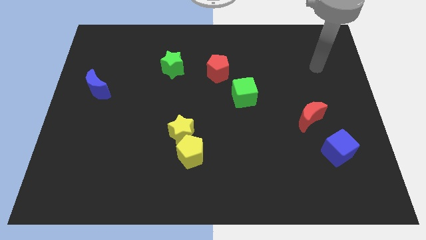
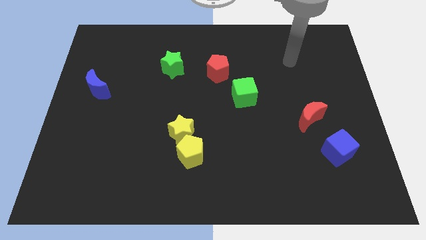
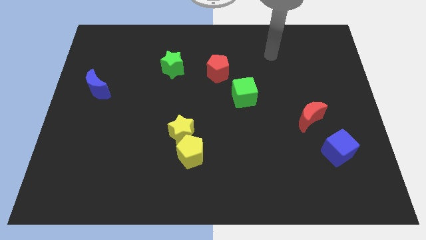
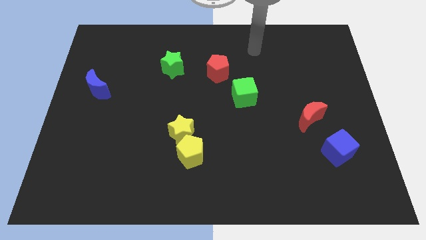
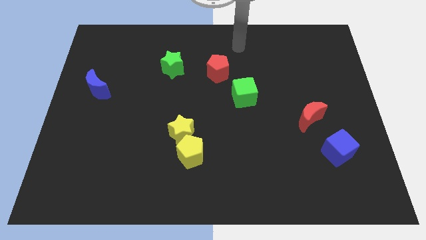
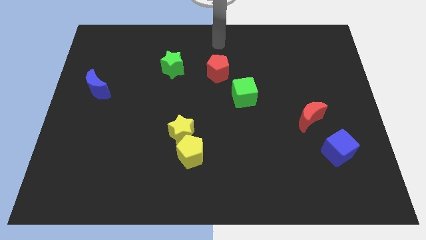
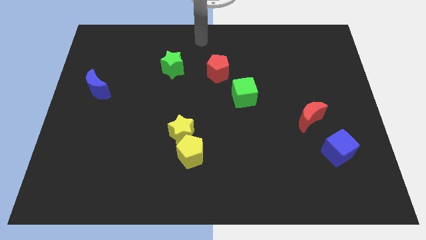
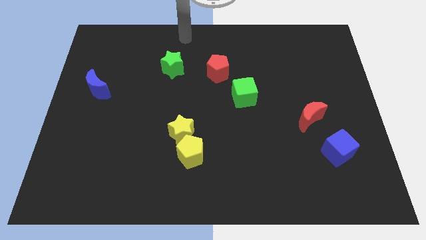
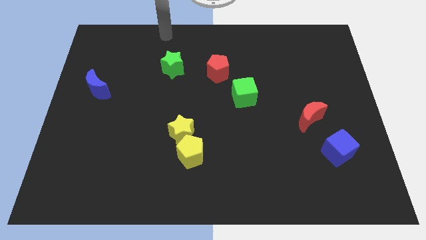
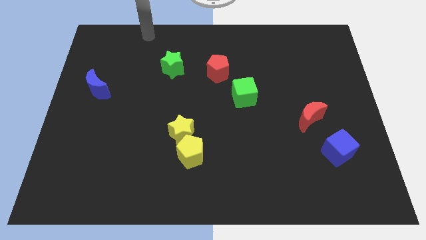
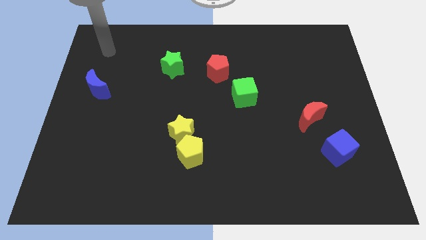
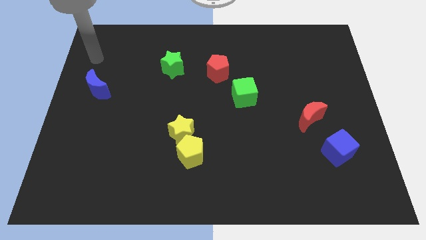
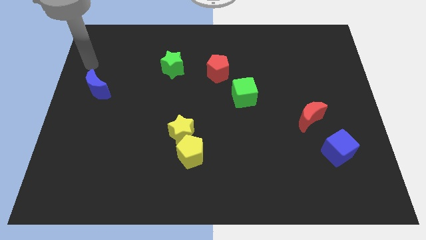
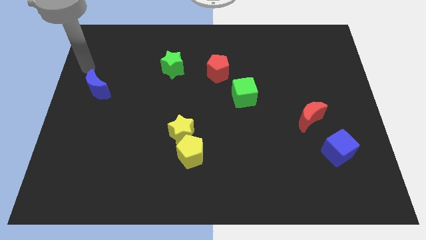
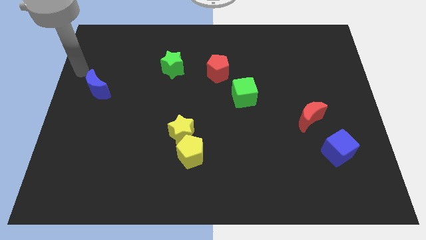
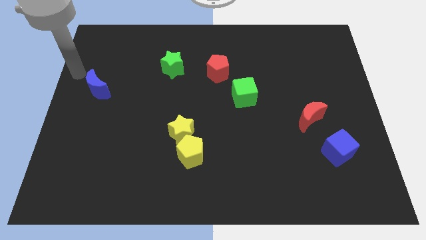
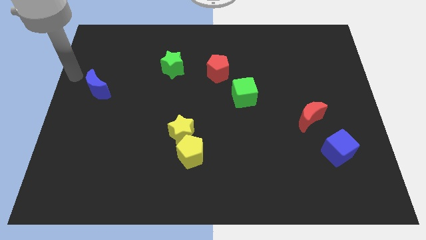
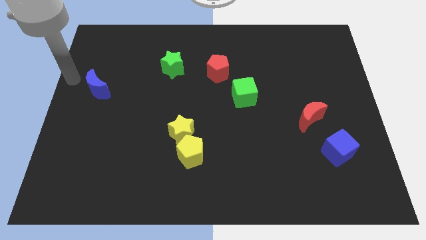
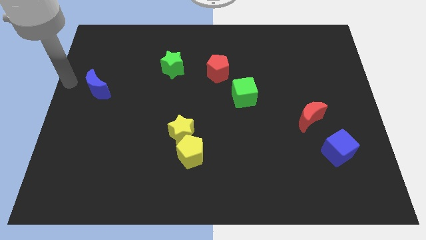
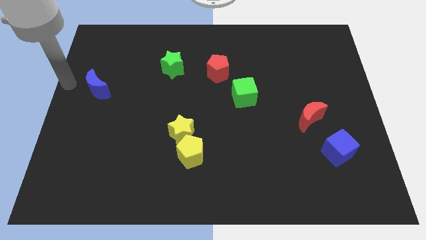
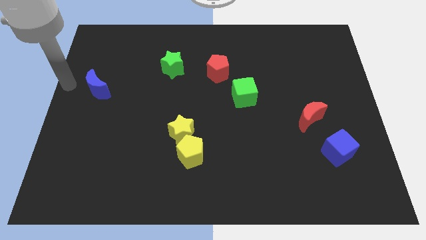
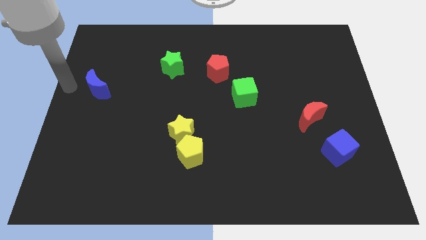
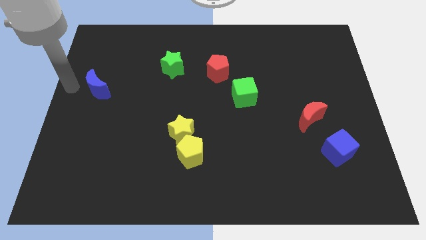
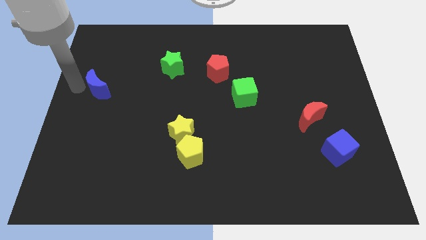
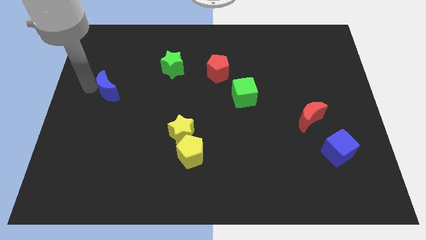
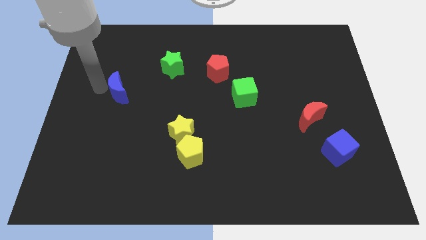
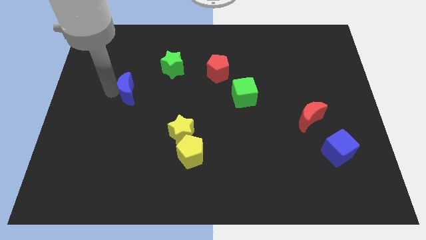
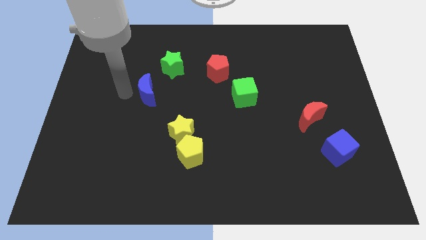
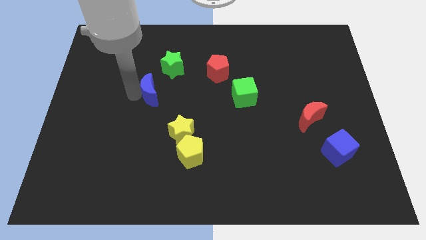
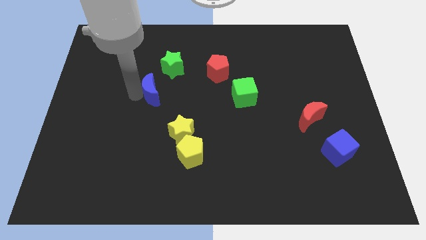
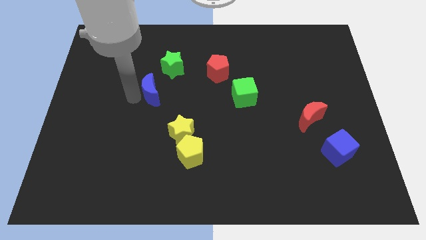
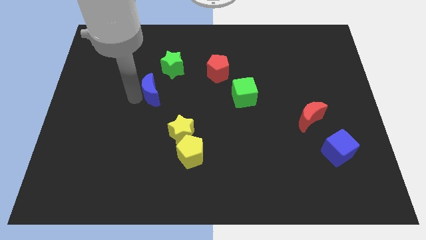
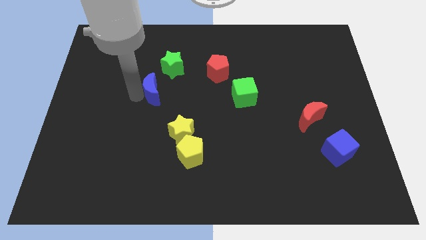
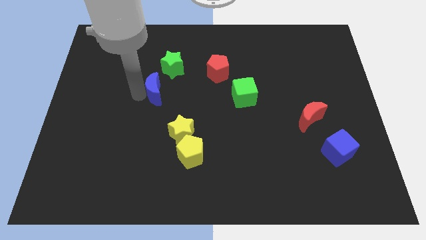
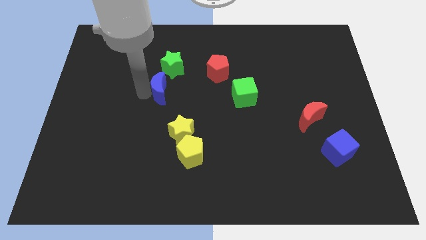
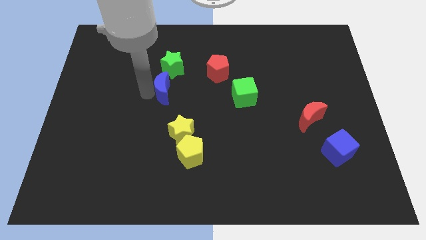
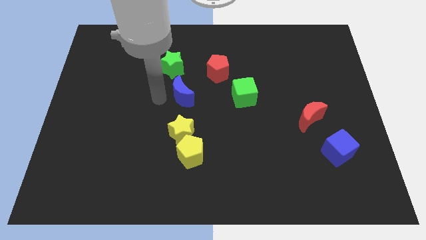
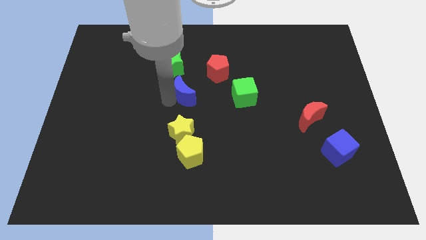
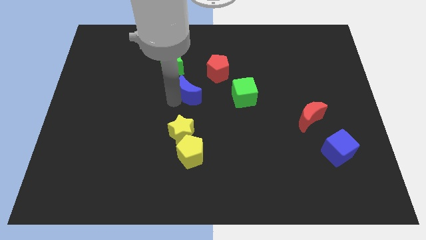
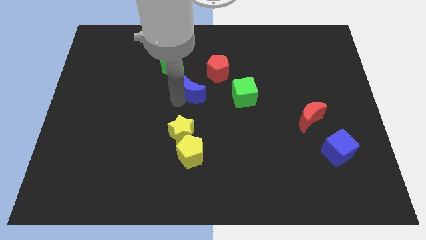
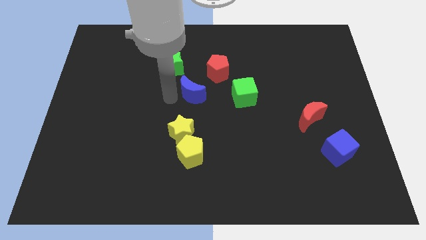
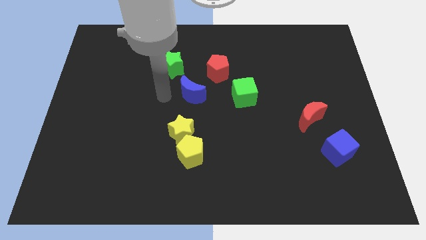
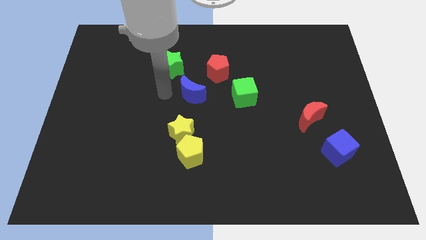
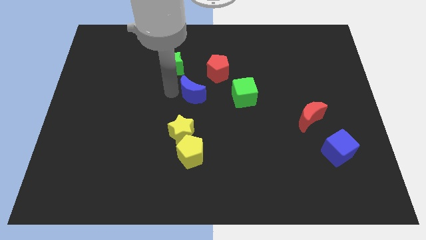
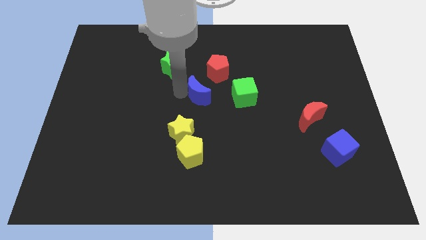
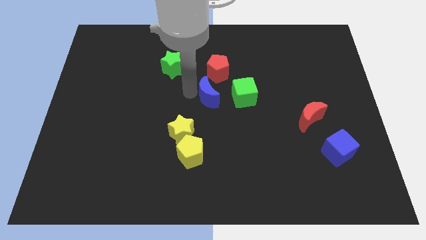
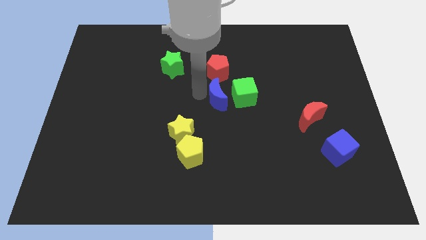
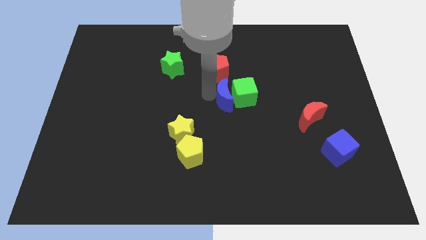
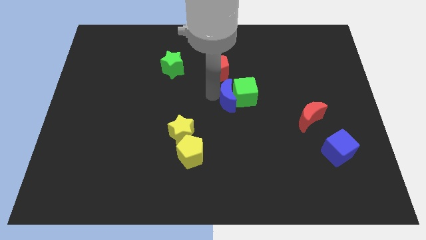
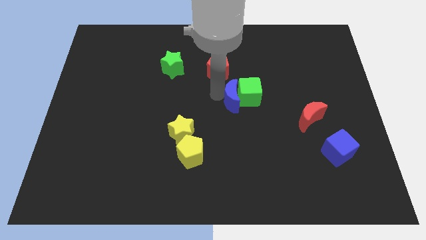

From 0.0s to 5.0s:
slide the blue moon to the green cube

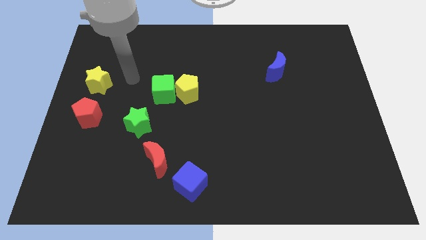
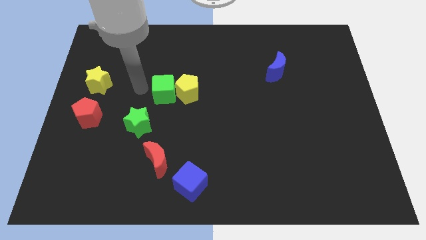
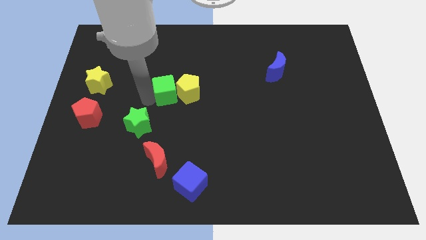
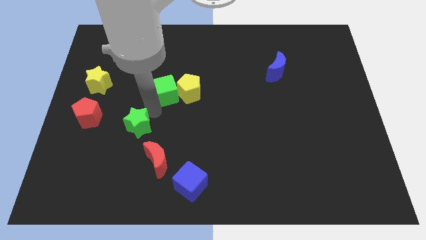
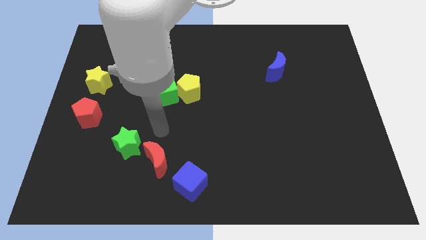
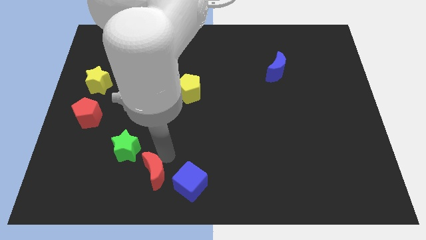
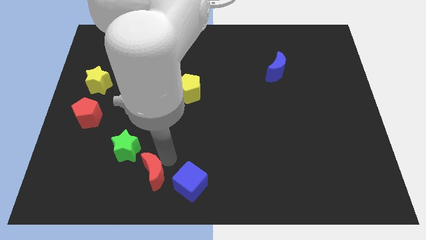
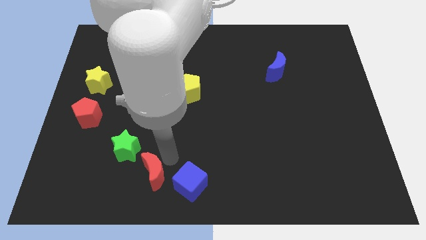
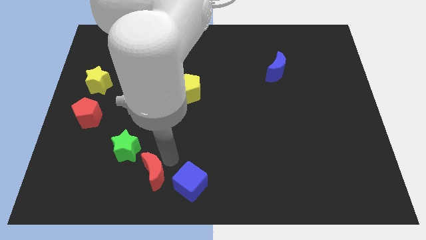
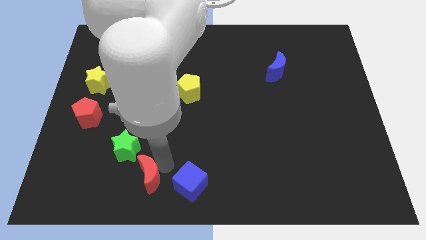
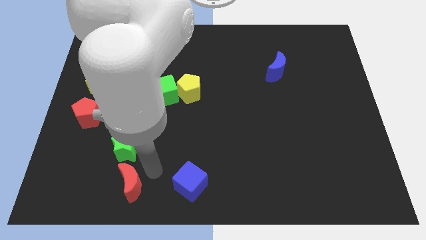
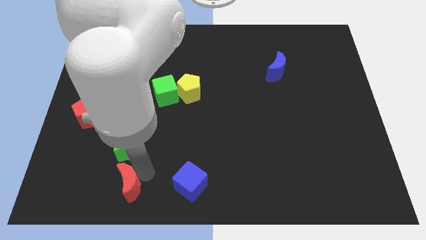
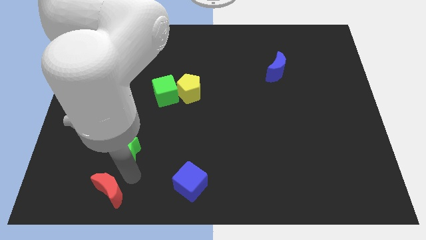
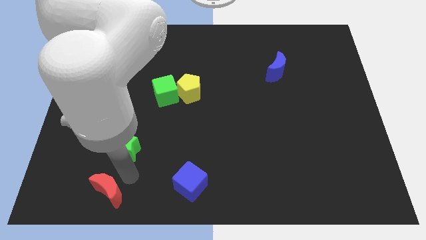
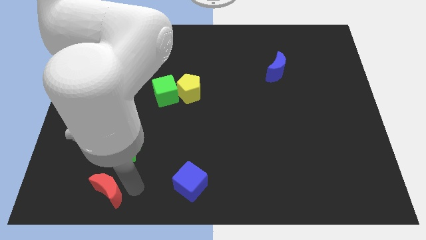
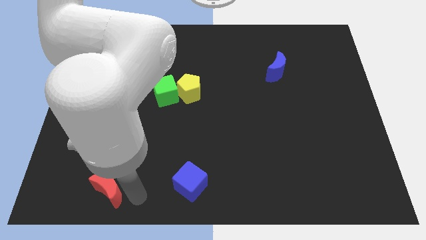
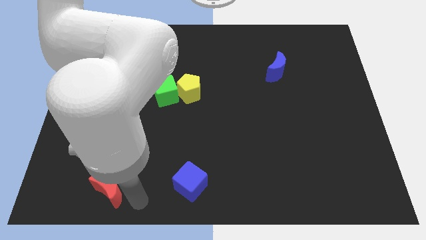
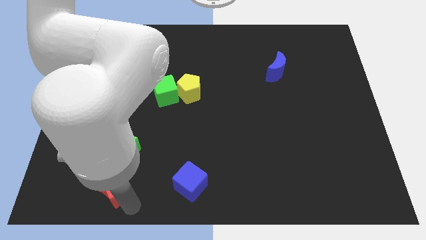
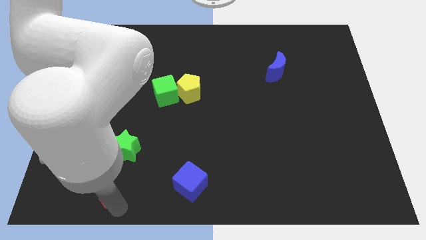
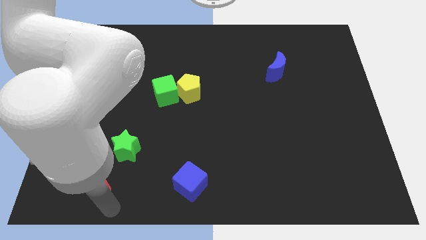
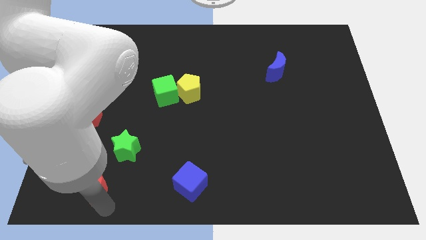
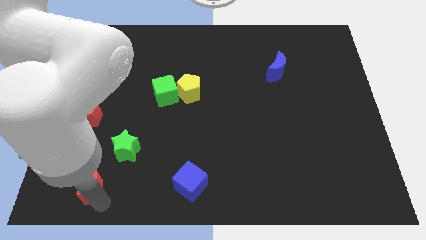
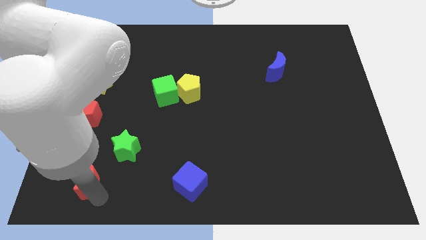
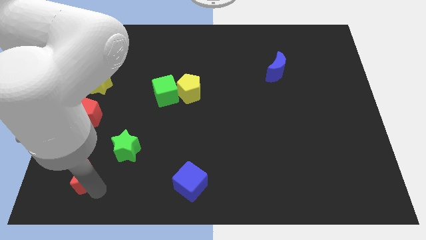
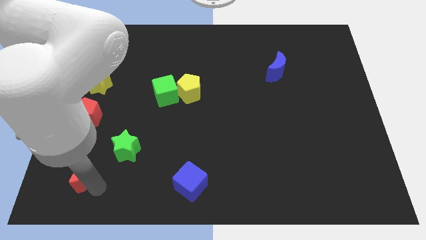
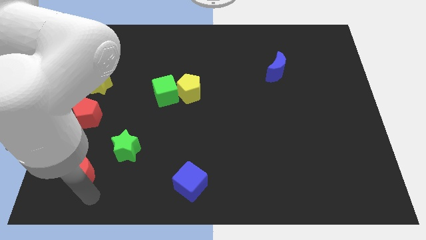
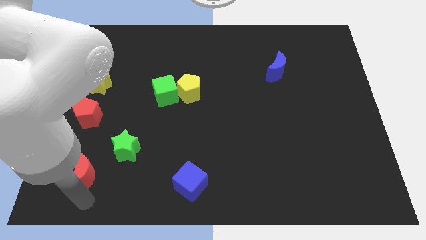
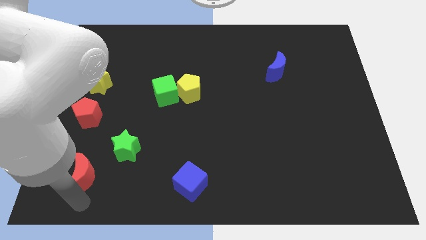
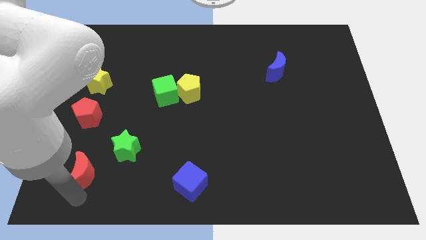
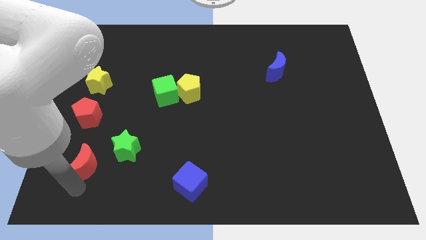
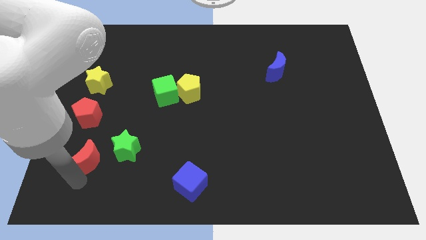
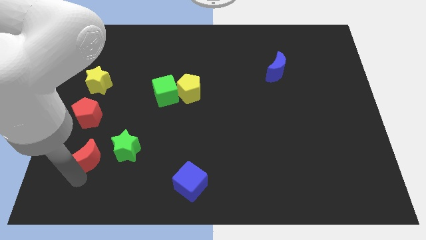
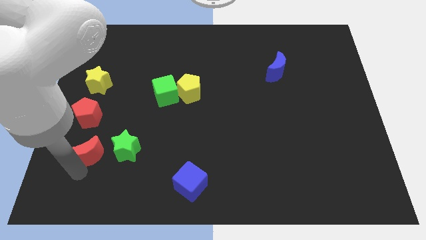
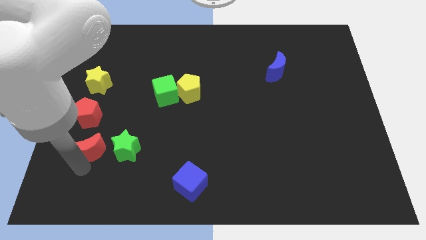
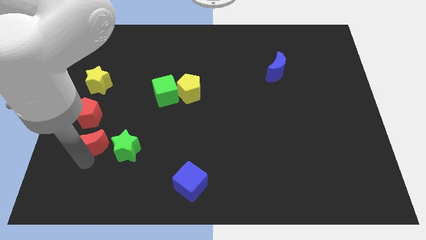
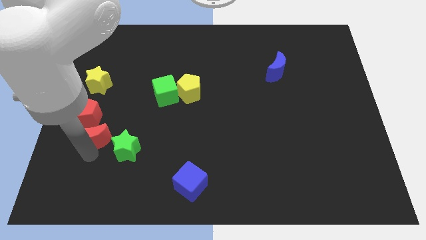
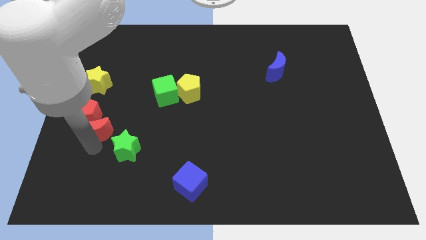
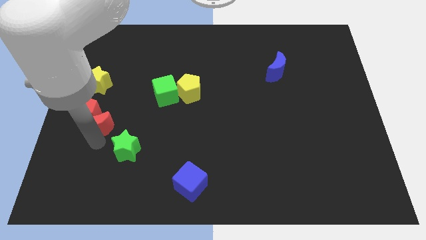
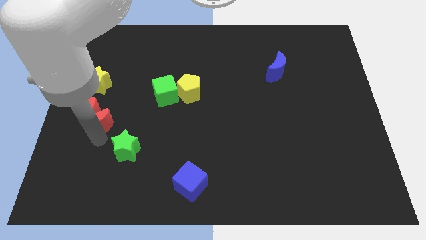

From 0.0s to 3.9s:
push the red moon to the red pentagon

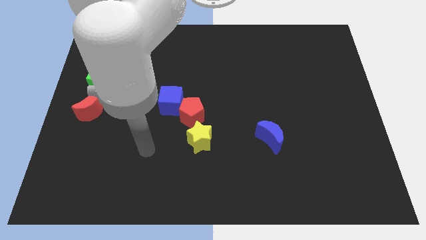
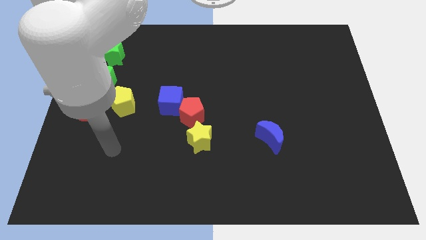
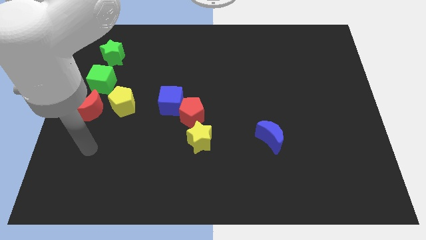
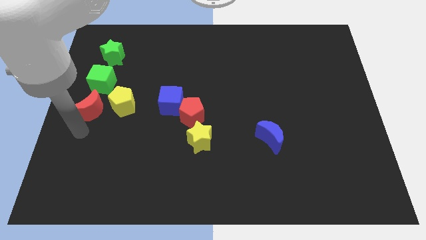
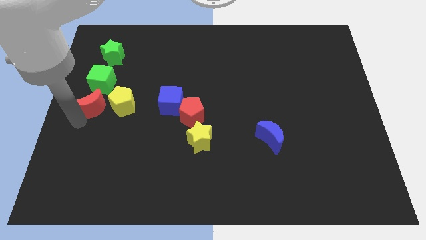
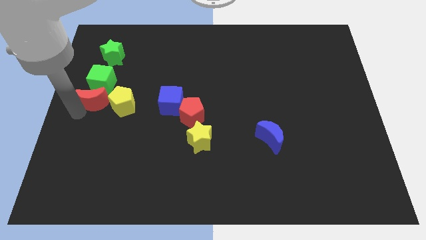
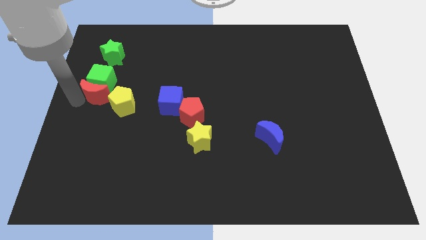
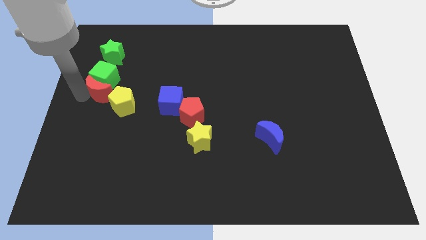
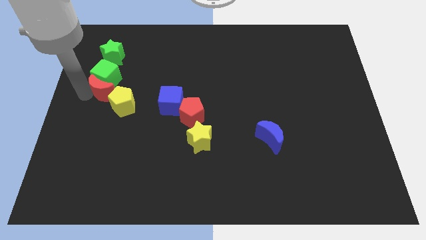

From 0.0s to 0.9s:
slide the red moon to the green cube
